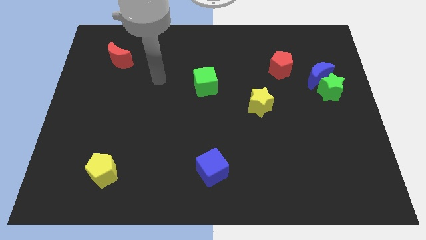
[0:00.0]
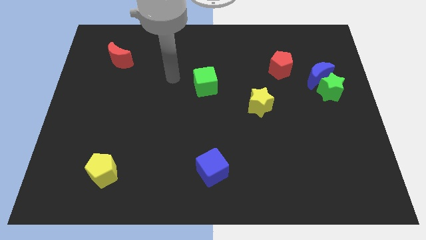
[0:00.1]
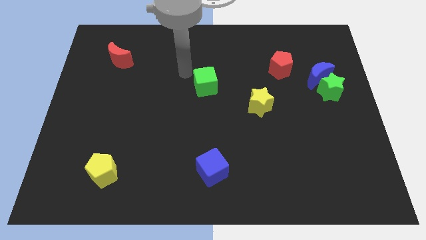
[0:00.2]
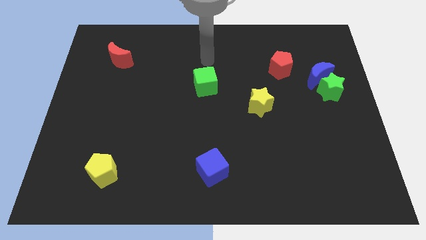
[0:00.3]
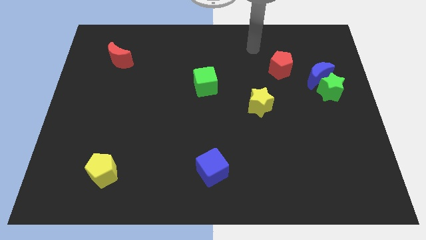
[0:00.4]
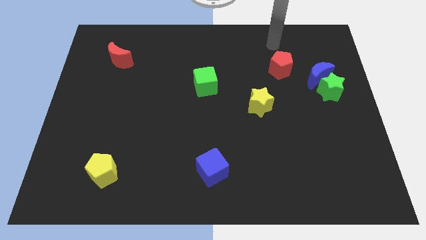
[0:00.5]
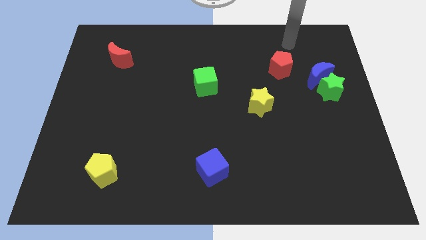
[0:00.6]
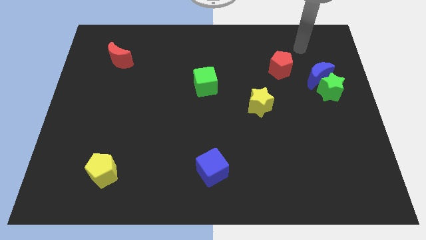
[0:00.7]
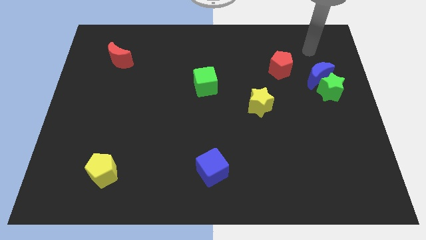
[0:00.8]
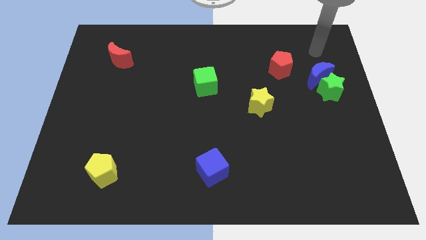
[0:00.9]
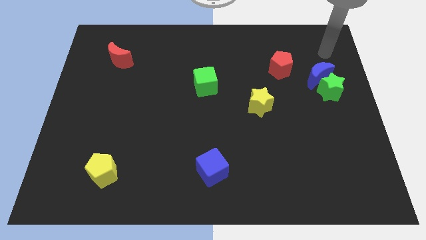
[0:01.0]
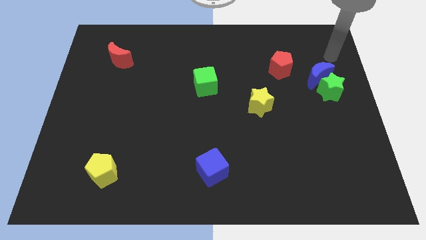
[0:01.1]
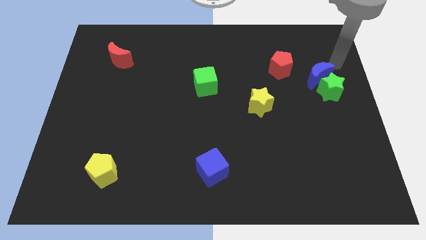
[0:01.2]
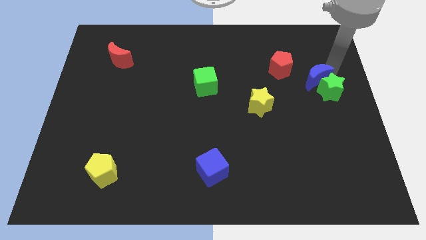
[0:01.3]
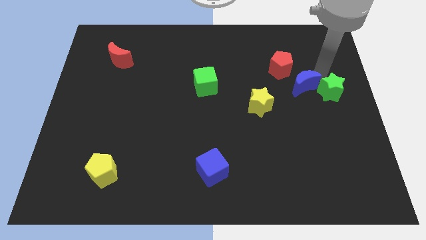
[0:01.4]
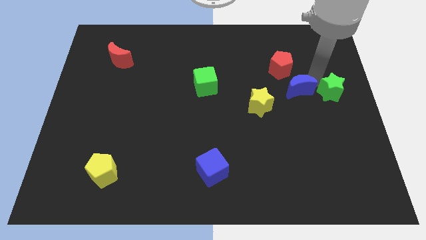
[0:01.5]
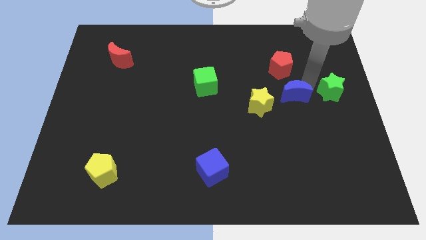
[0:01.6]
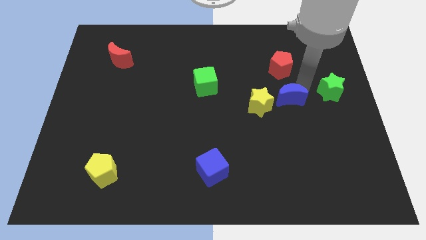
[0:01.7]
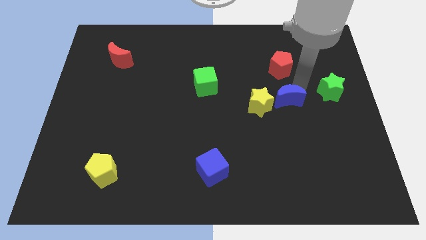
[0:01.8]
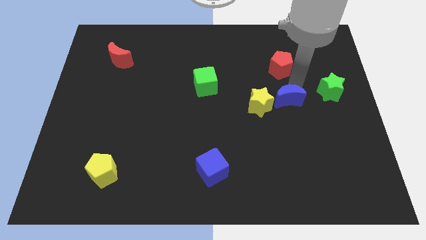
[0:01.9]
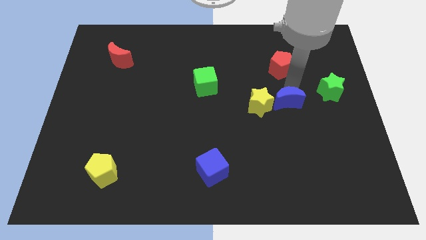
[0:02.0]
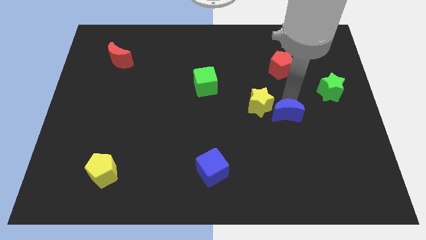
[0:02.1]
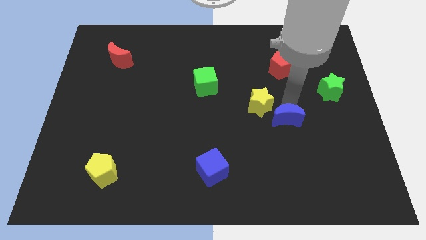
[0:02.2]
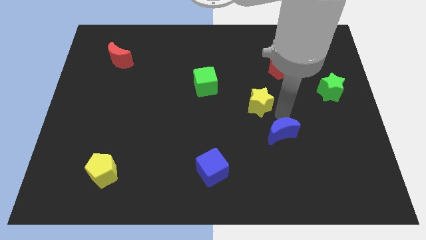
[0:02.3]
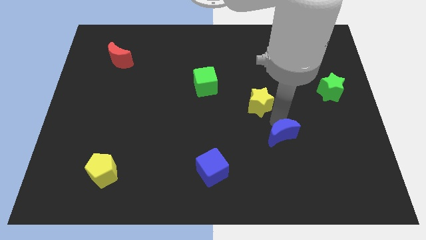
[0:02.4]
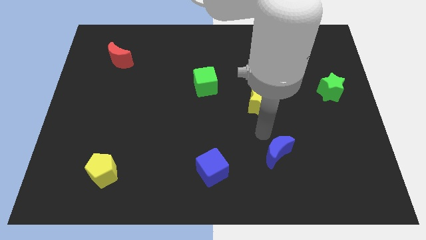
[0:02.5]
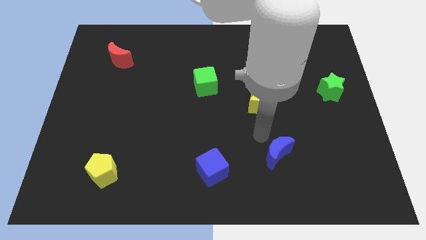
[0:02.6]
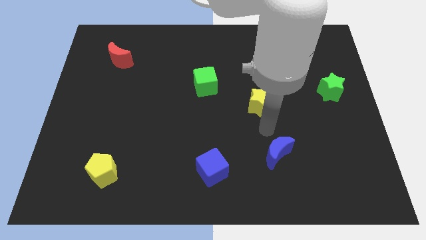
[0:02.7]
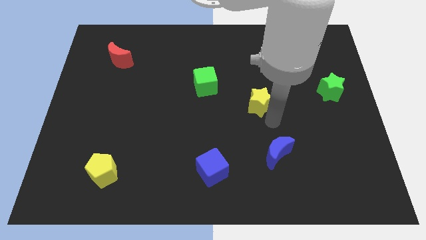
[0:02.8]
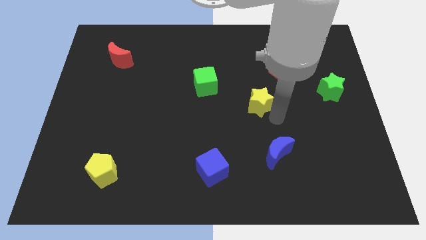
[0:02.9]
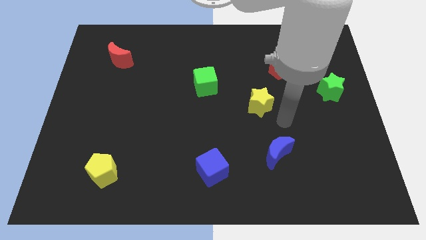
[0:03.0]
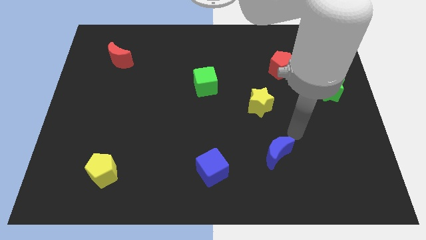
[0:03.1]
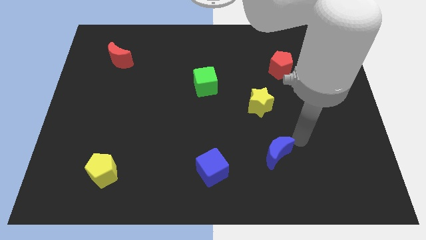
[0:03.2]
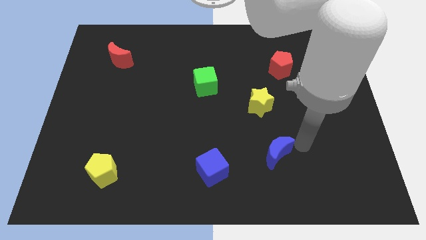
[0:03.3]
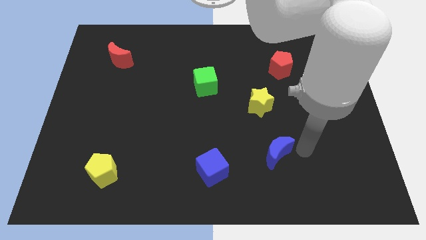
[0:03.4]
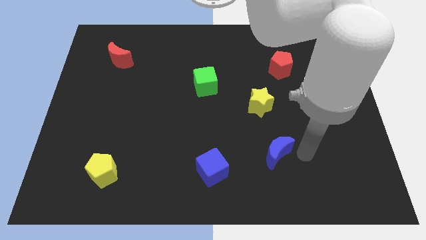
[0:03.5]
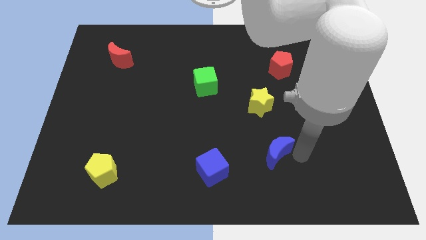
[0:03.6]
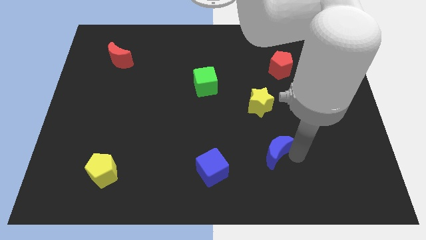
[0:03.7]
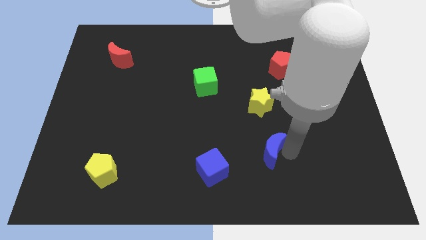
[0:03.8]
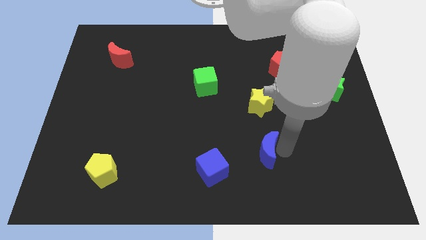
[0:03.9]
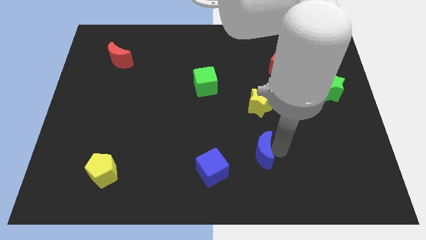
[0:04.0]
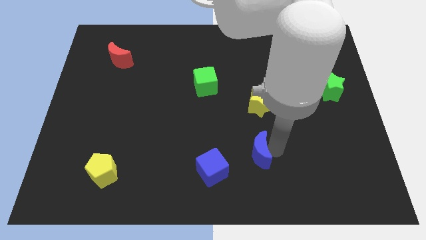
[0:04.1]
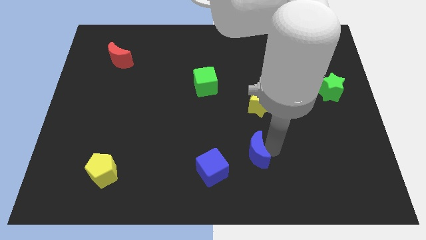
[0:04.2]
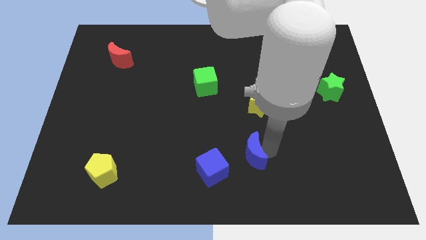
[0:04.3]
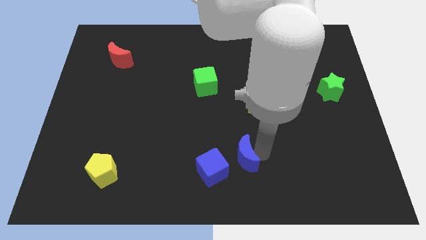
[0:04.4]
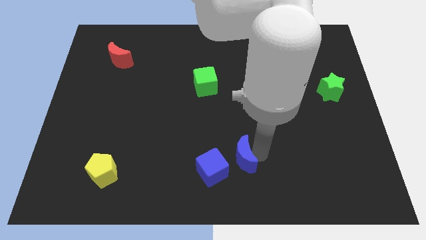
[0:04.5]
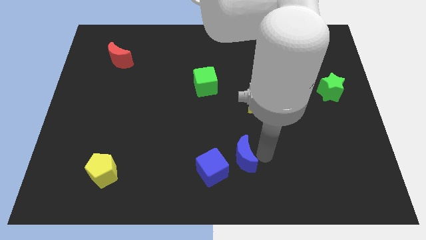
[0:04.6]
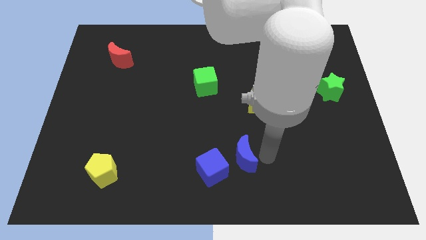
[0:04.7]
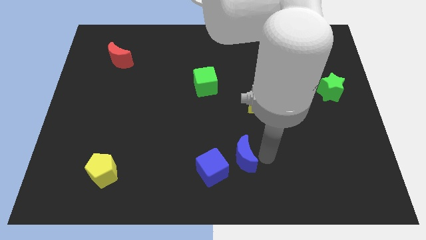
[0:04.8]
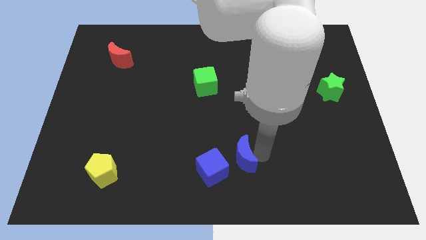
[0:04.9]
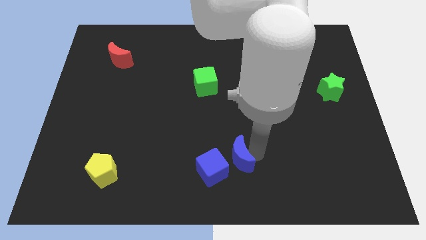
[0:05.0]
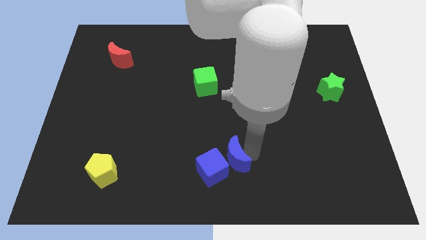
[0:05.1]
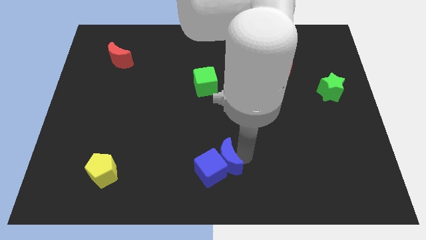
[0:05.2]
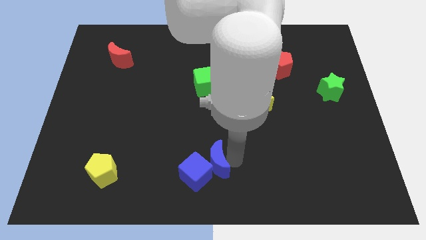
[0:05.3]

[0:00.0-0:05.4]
slide the blue moon next to the blue cube

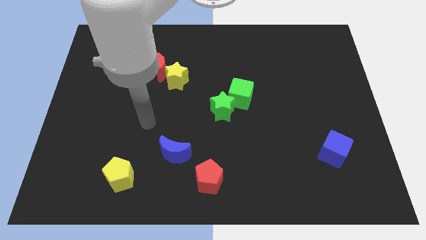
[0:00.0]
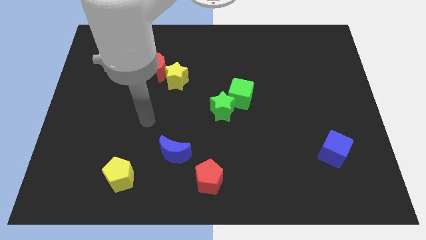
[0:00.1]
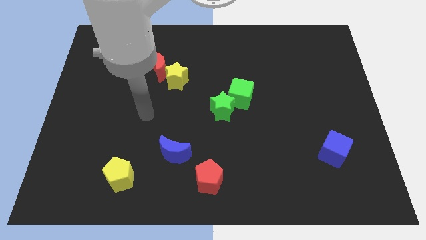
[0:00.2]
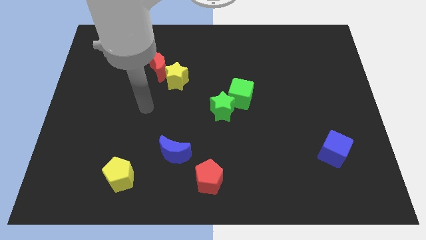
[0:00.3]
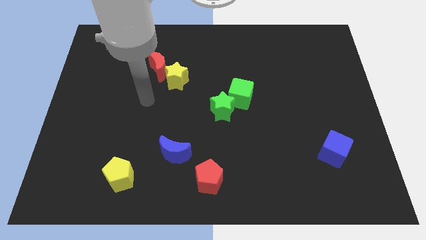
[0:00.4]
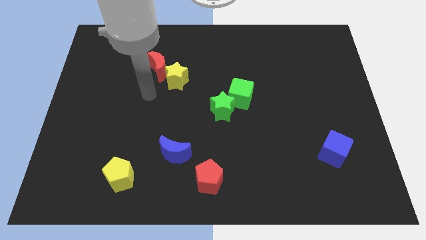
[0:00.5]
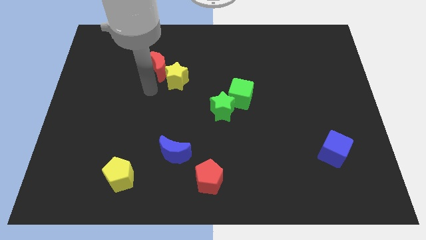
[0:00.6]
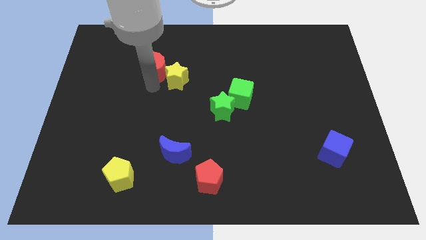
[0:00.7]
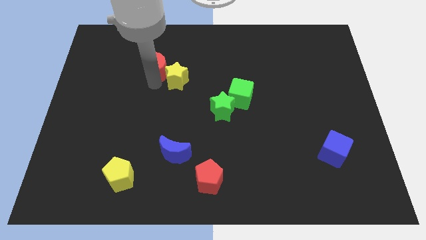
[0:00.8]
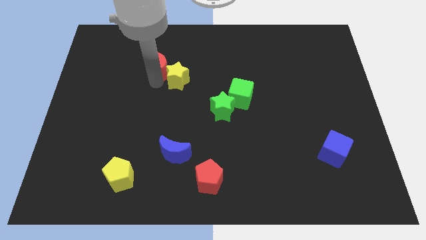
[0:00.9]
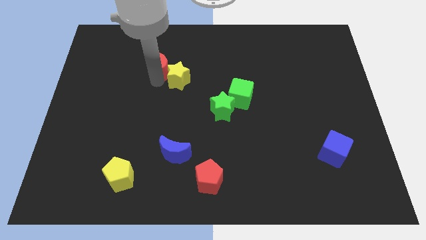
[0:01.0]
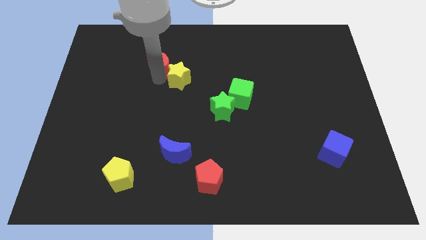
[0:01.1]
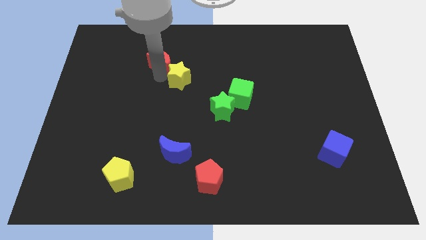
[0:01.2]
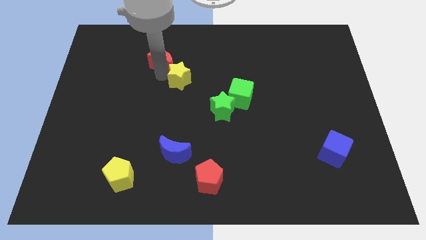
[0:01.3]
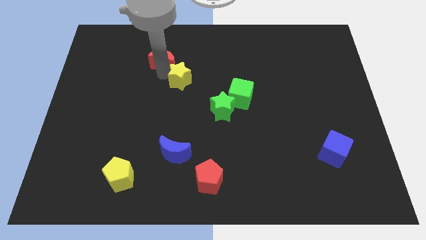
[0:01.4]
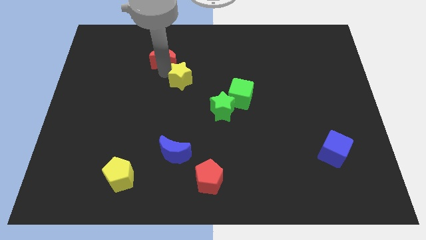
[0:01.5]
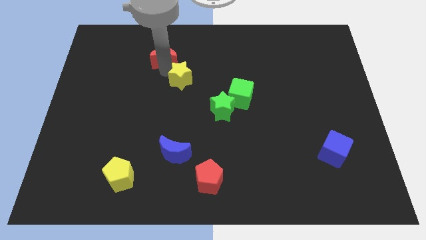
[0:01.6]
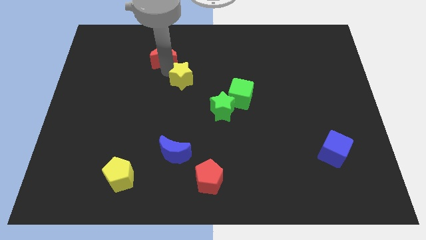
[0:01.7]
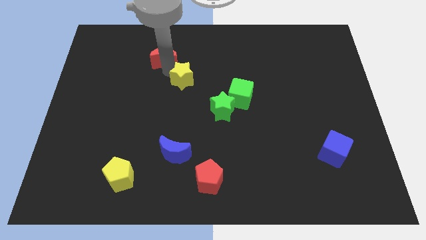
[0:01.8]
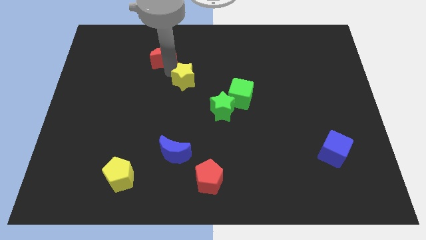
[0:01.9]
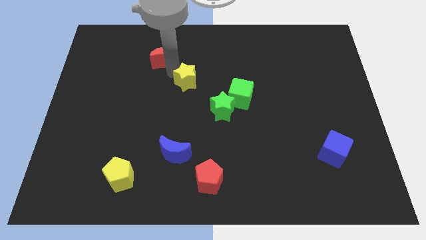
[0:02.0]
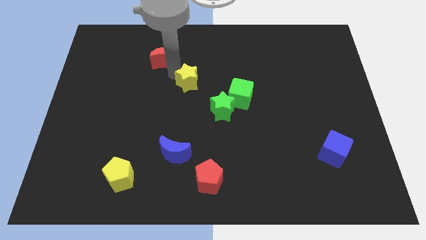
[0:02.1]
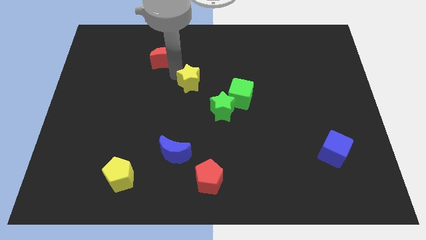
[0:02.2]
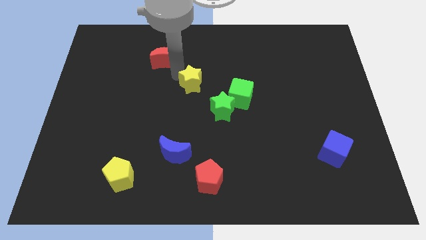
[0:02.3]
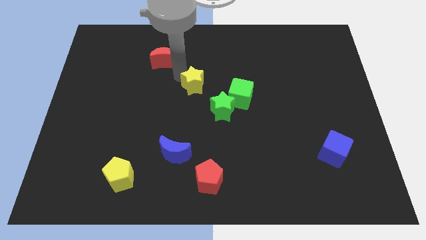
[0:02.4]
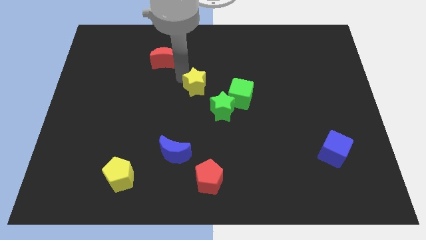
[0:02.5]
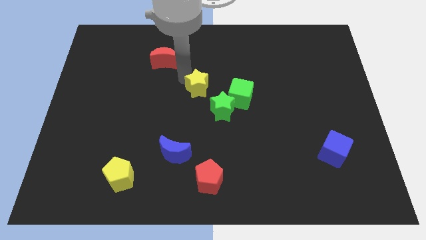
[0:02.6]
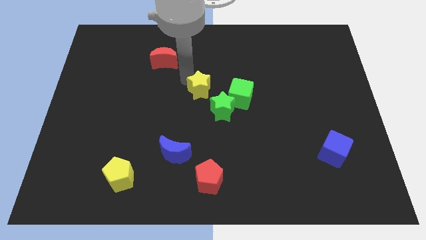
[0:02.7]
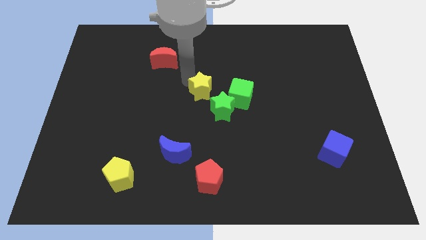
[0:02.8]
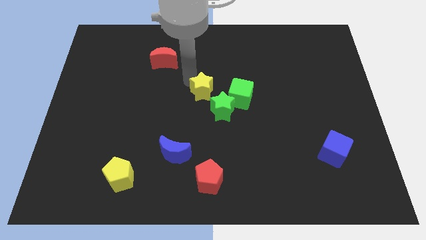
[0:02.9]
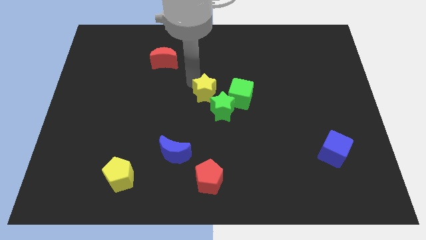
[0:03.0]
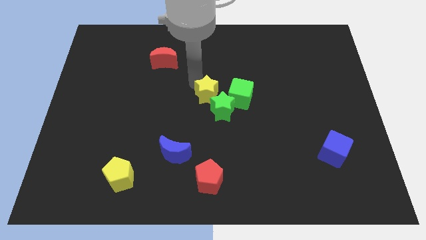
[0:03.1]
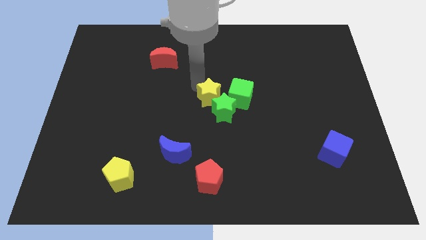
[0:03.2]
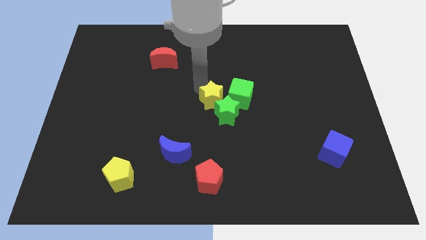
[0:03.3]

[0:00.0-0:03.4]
slide the yellow star next to the green star
